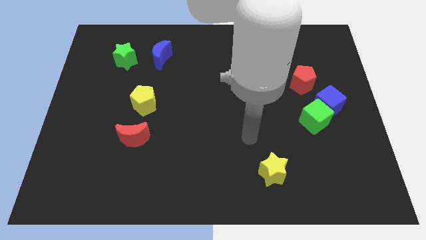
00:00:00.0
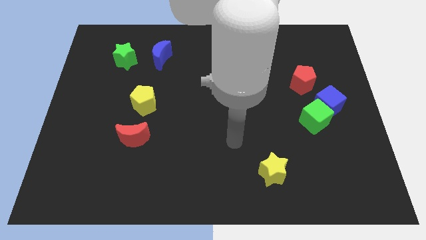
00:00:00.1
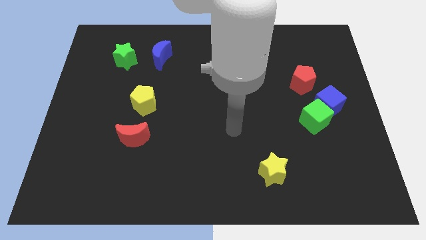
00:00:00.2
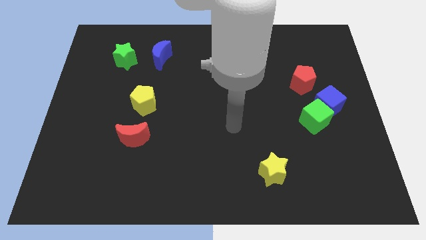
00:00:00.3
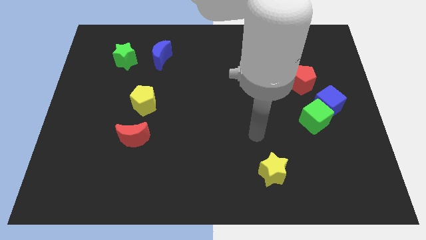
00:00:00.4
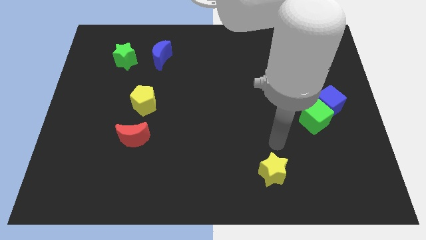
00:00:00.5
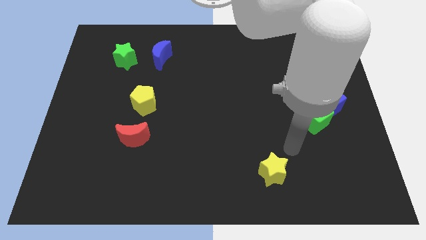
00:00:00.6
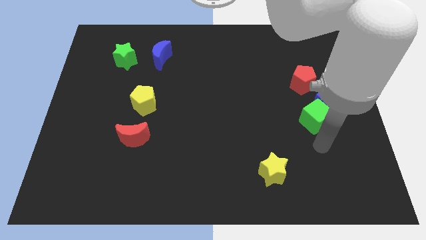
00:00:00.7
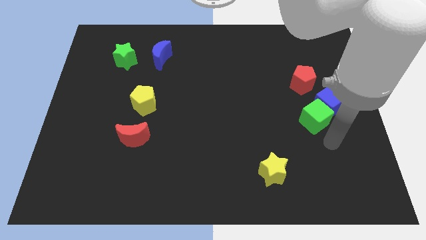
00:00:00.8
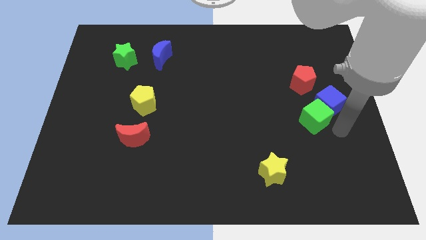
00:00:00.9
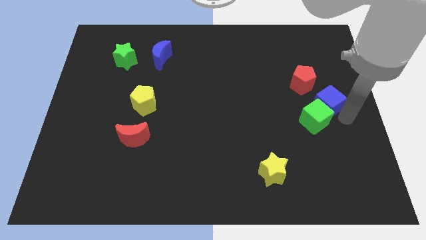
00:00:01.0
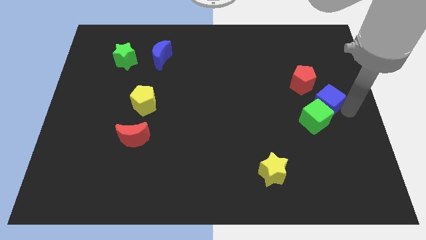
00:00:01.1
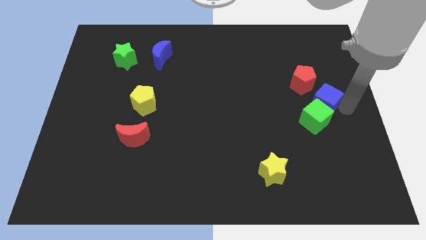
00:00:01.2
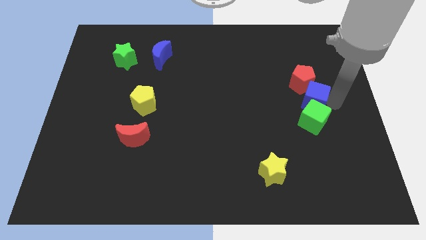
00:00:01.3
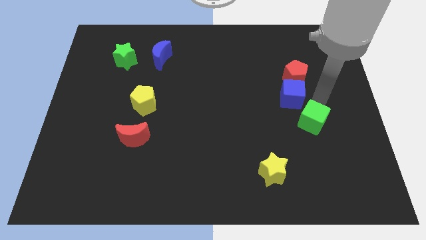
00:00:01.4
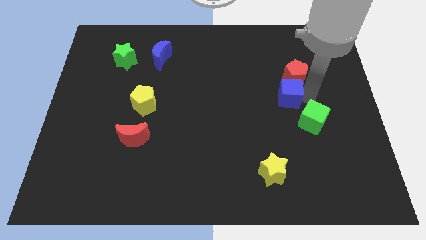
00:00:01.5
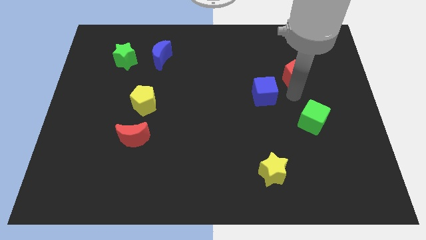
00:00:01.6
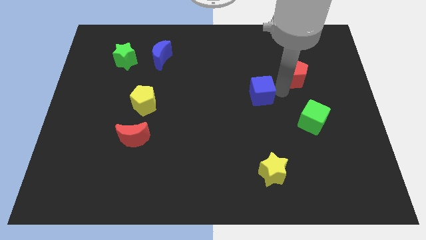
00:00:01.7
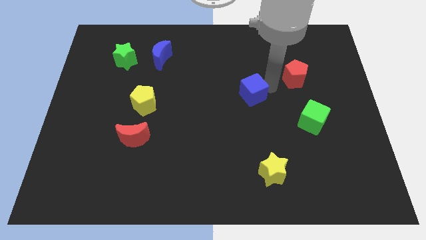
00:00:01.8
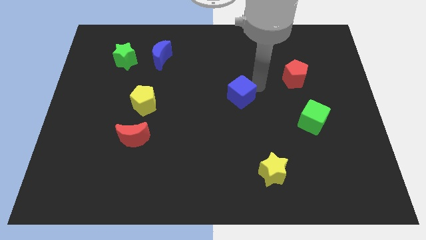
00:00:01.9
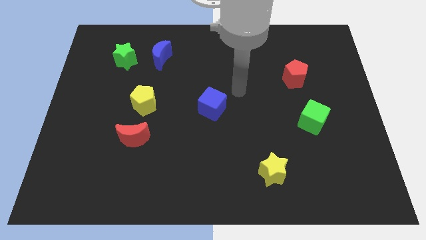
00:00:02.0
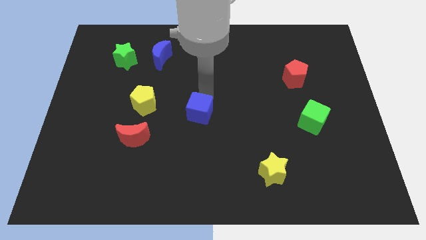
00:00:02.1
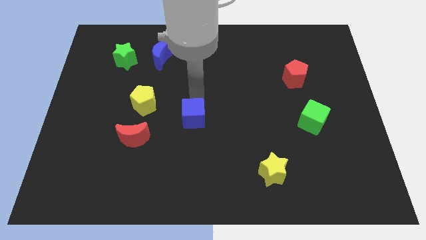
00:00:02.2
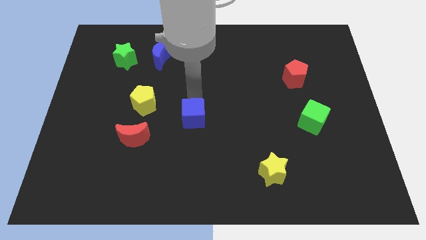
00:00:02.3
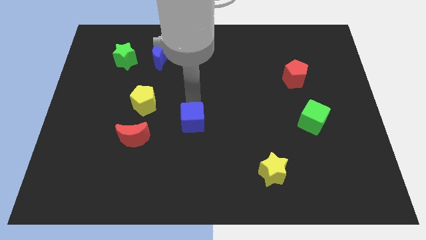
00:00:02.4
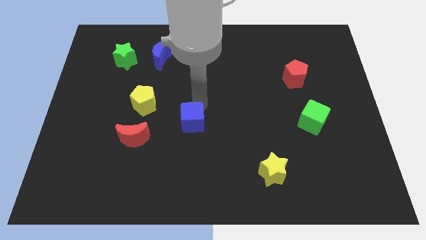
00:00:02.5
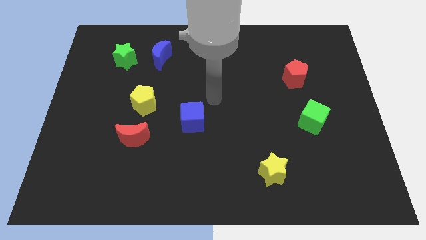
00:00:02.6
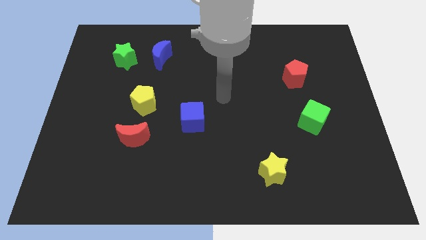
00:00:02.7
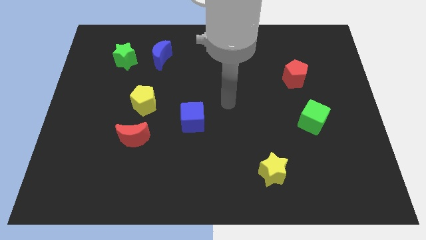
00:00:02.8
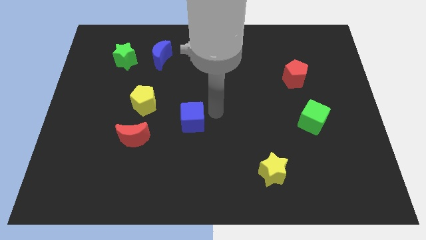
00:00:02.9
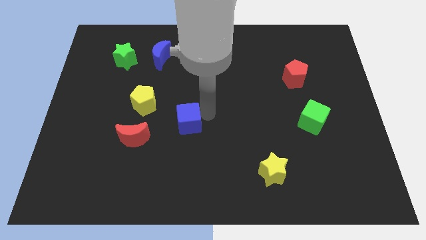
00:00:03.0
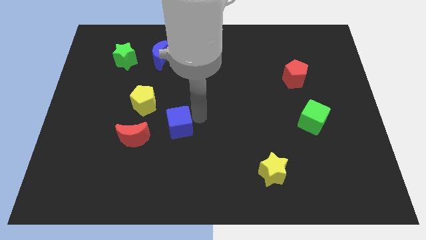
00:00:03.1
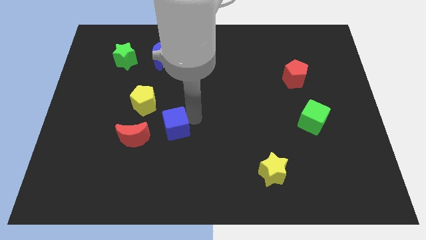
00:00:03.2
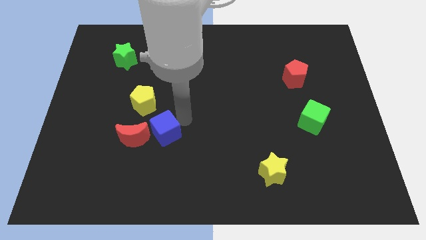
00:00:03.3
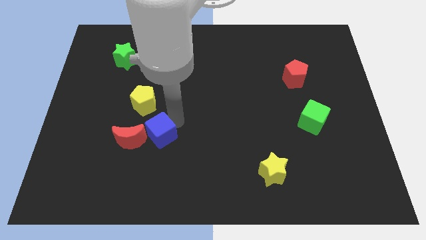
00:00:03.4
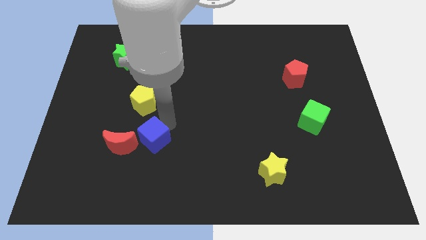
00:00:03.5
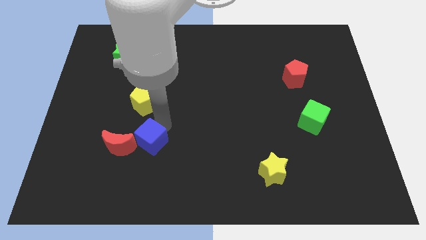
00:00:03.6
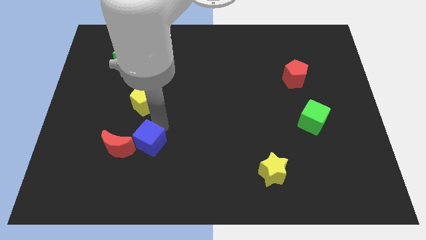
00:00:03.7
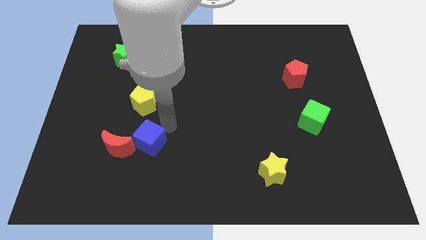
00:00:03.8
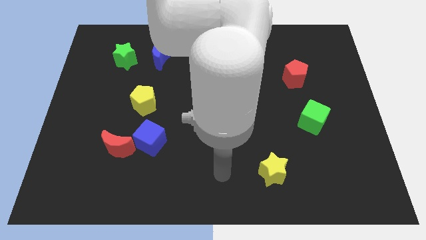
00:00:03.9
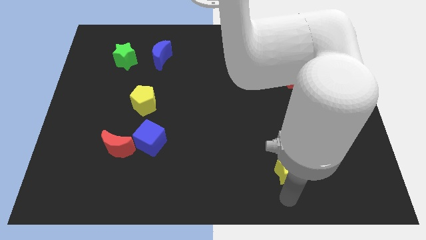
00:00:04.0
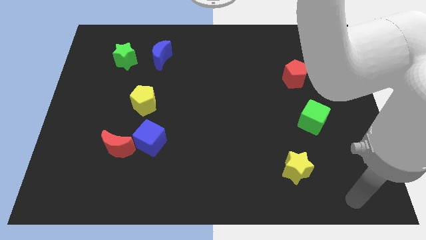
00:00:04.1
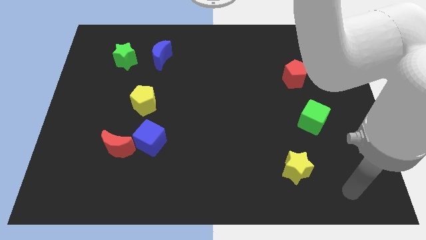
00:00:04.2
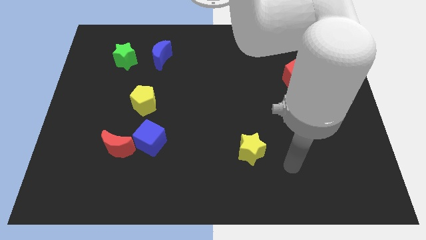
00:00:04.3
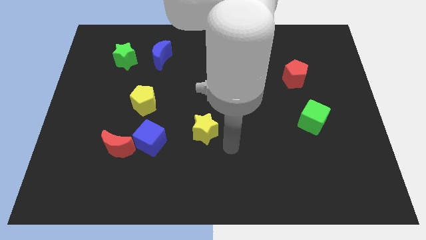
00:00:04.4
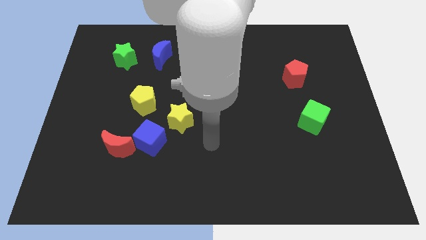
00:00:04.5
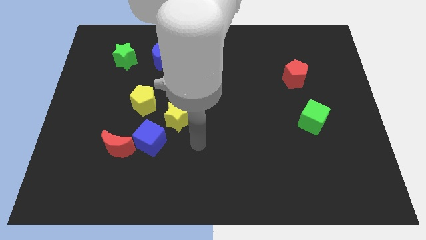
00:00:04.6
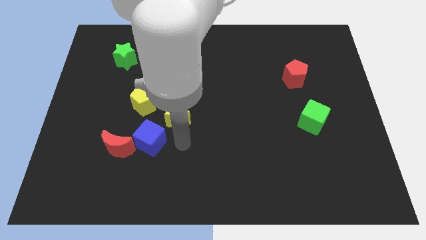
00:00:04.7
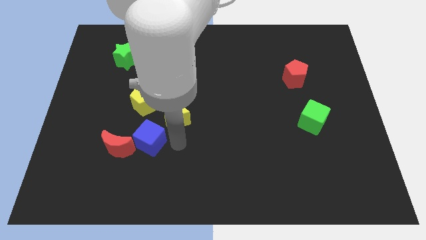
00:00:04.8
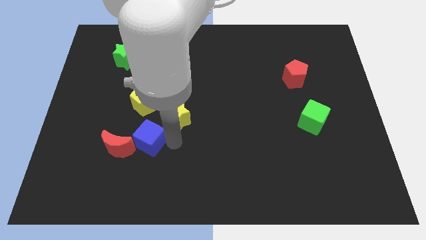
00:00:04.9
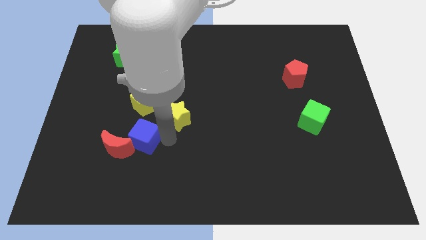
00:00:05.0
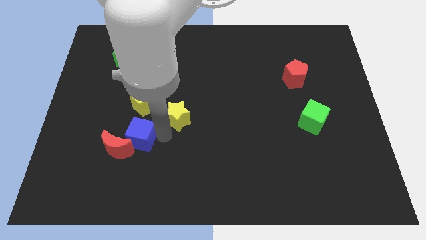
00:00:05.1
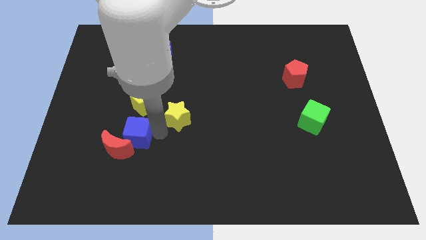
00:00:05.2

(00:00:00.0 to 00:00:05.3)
move the blue cube next to the red moon

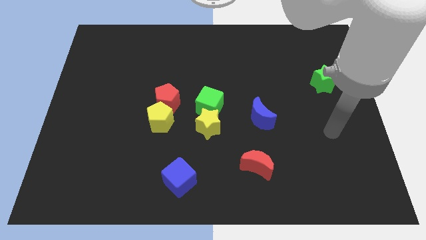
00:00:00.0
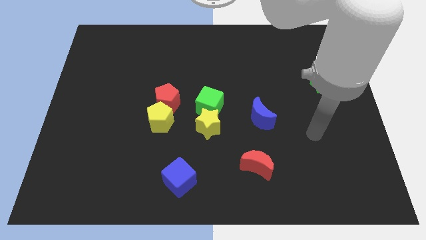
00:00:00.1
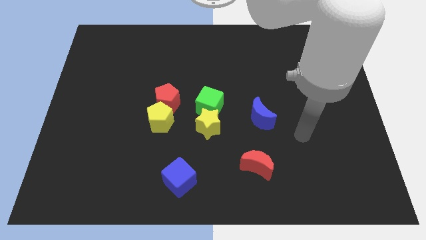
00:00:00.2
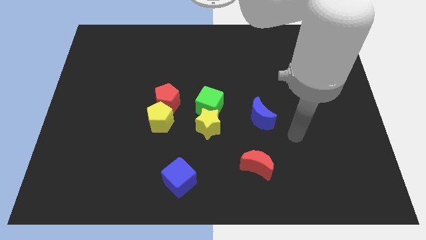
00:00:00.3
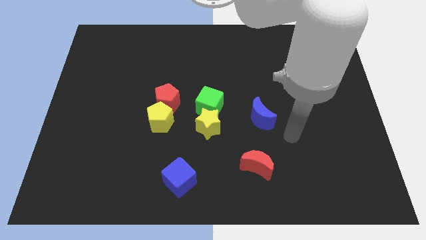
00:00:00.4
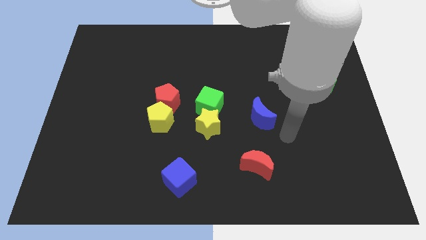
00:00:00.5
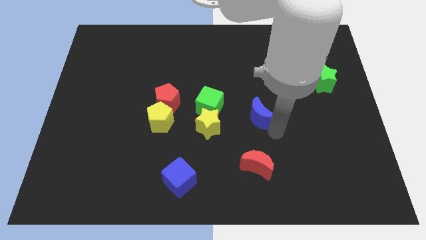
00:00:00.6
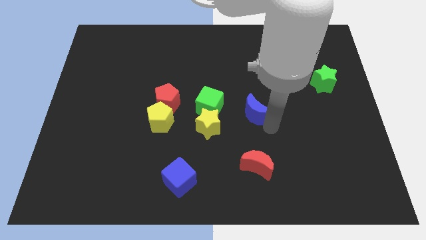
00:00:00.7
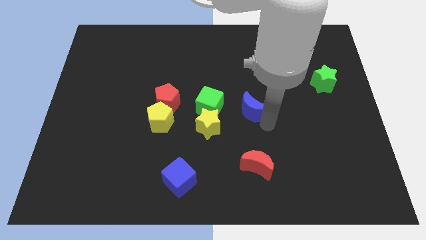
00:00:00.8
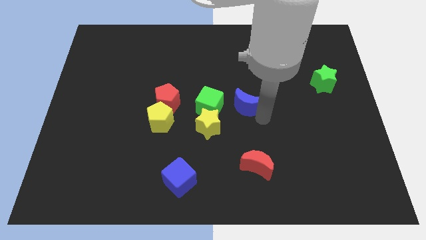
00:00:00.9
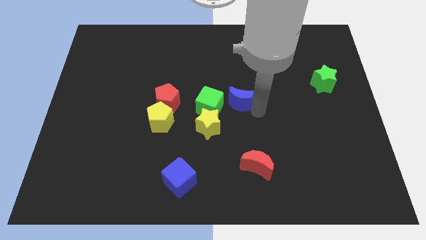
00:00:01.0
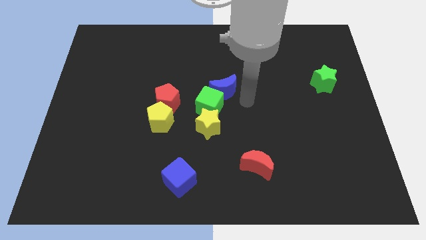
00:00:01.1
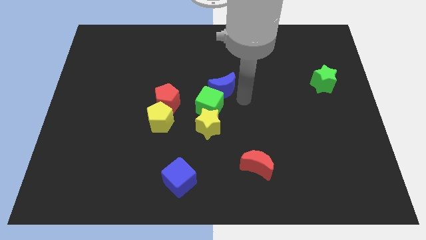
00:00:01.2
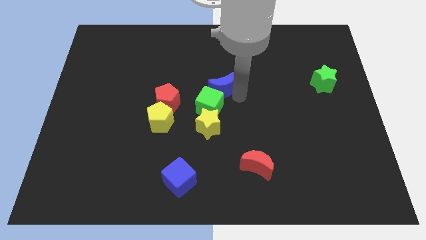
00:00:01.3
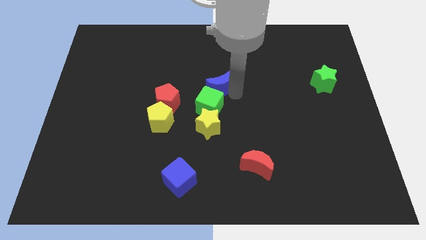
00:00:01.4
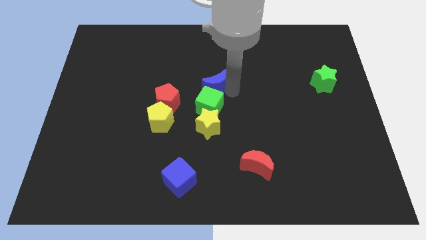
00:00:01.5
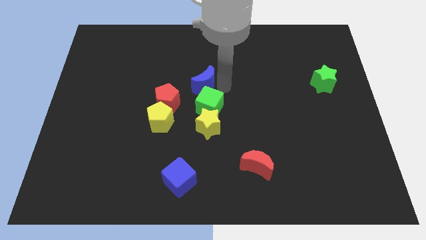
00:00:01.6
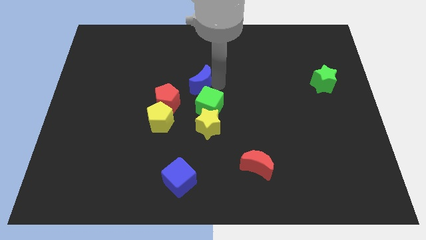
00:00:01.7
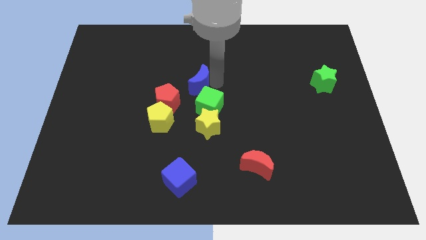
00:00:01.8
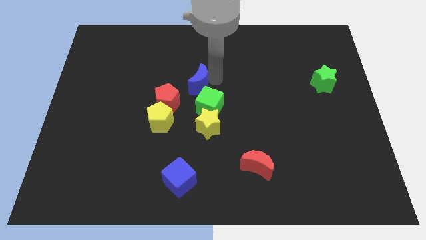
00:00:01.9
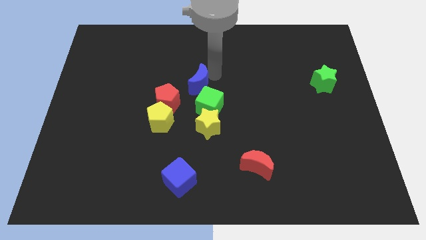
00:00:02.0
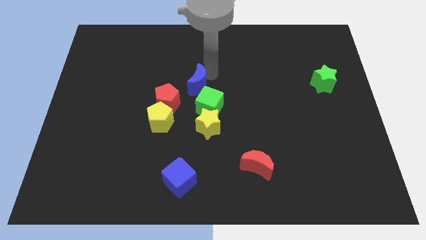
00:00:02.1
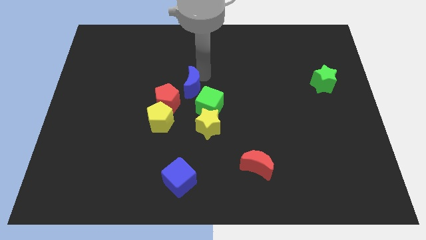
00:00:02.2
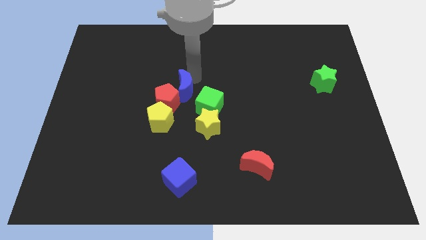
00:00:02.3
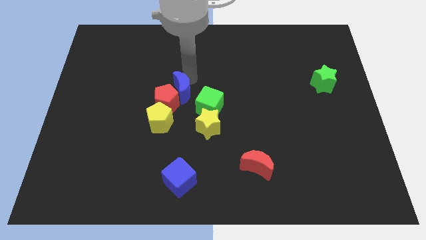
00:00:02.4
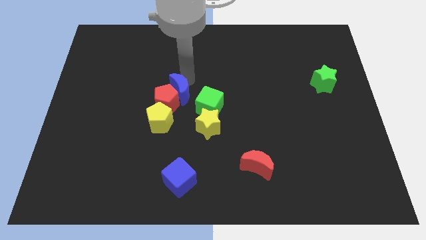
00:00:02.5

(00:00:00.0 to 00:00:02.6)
push the blue moon towards the red pentagon

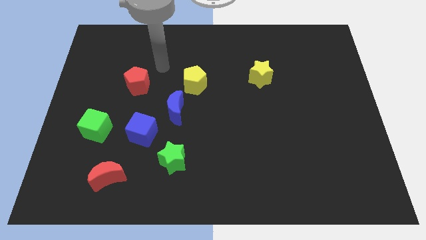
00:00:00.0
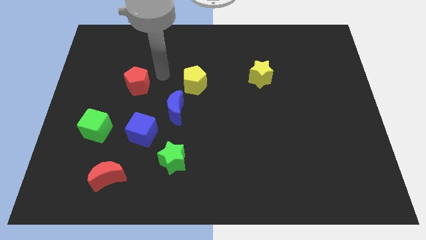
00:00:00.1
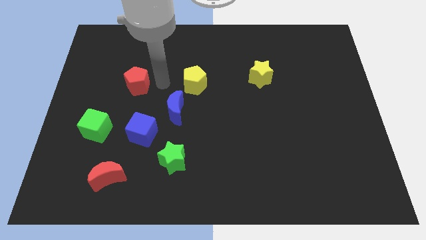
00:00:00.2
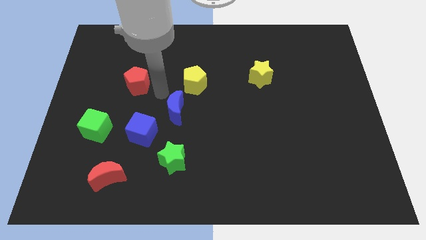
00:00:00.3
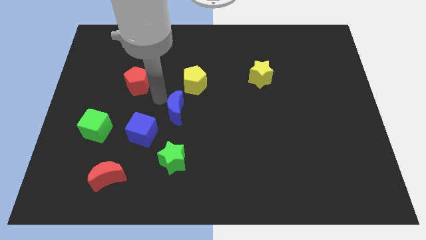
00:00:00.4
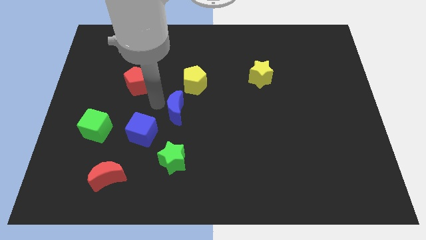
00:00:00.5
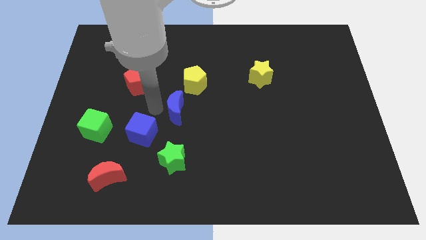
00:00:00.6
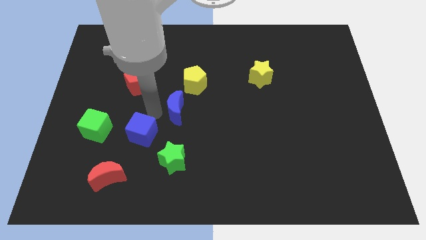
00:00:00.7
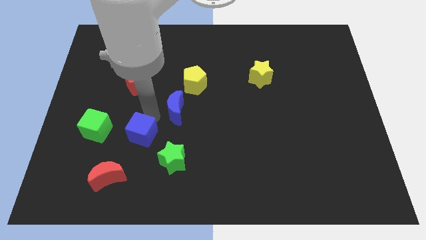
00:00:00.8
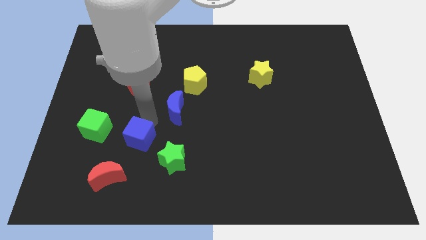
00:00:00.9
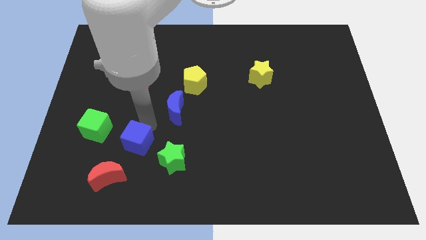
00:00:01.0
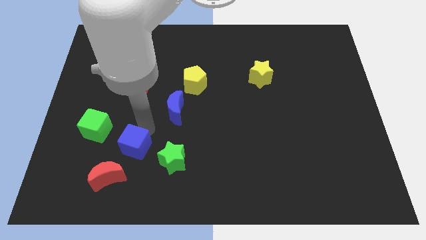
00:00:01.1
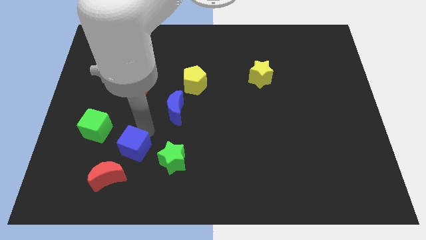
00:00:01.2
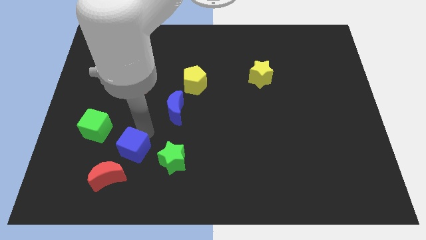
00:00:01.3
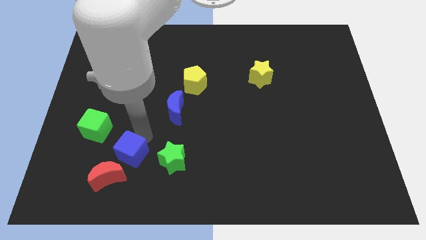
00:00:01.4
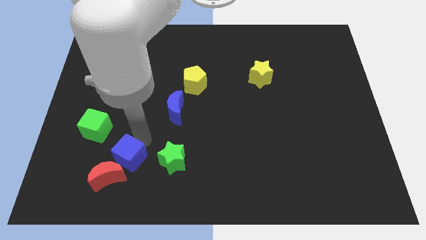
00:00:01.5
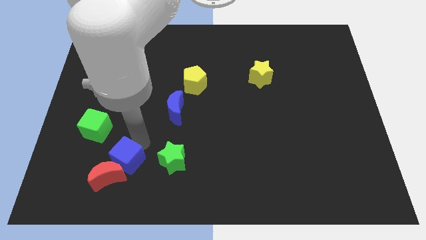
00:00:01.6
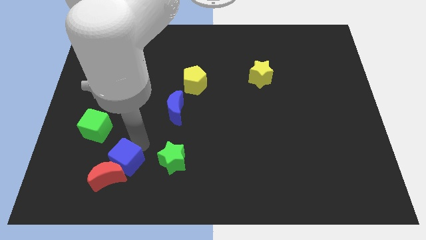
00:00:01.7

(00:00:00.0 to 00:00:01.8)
push the blue cube close to the red moon
